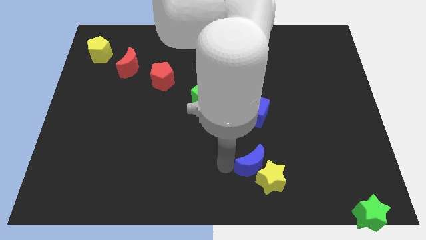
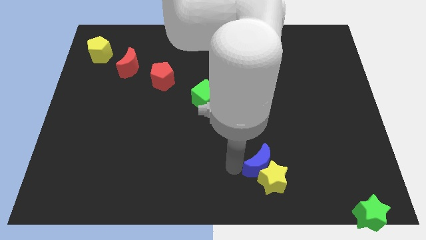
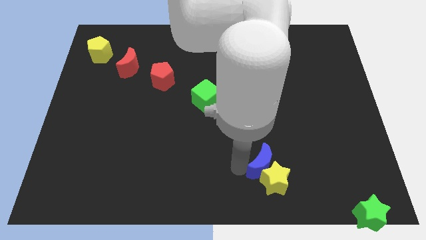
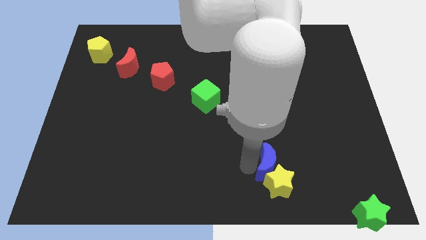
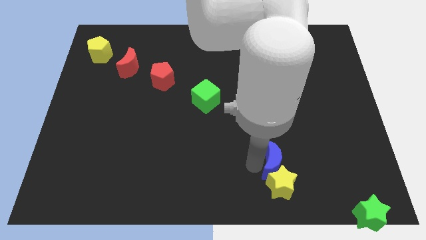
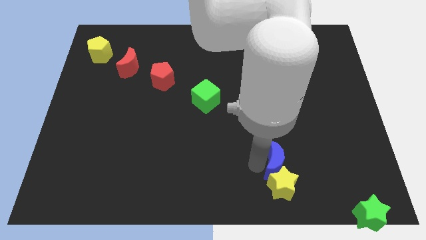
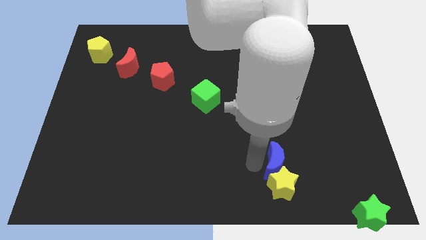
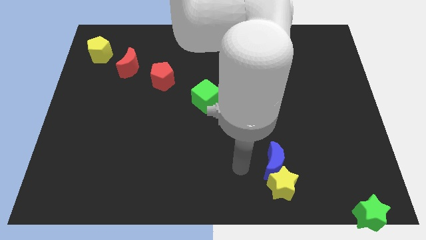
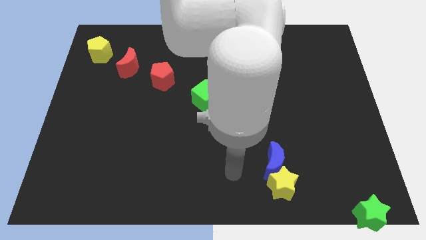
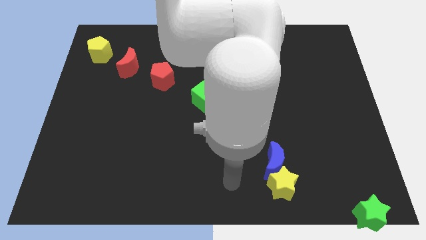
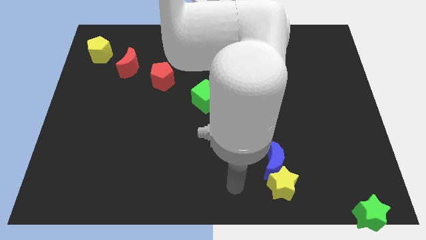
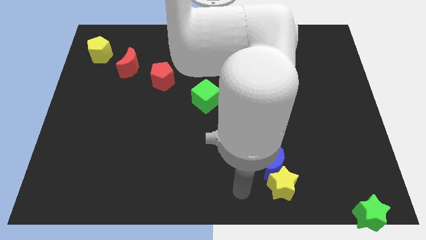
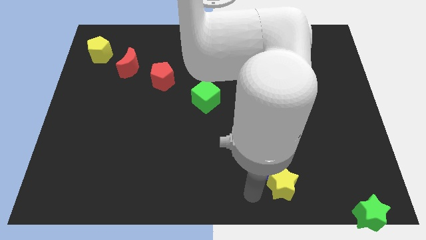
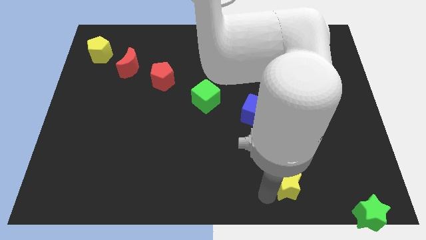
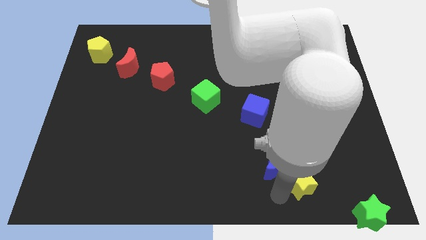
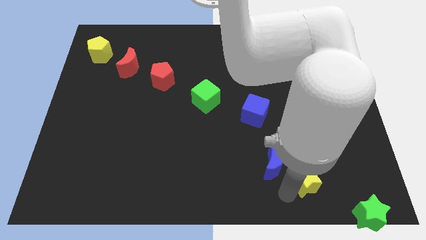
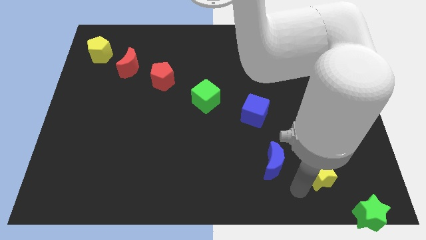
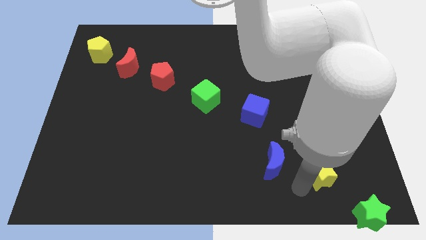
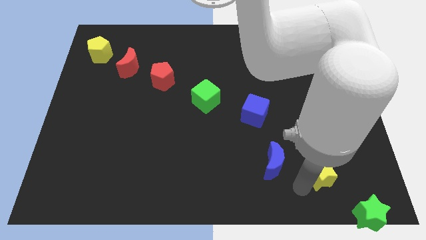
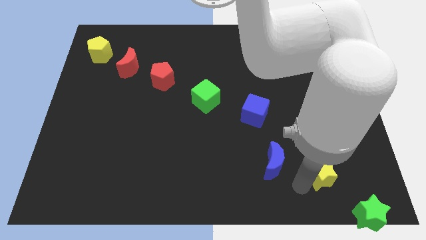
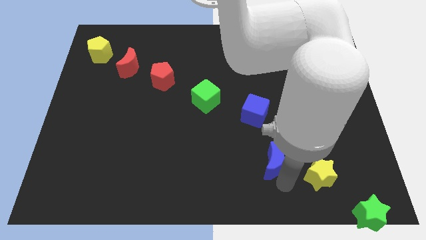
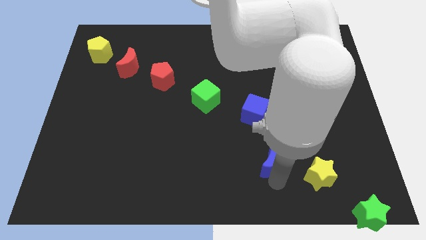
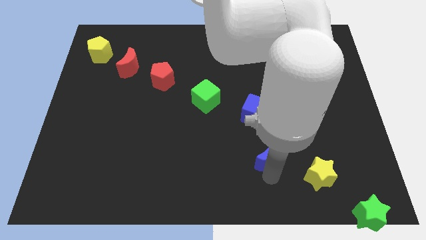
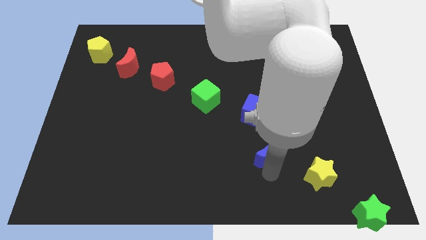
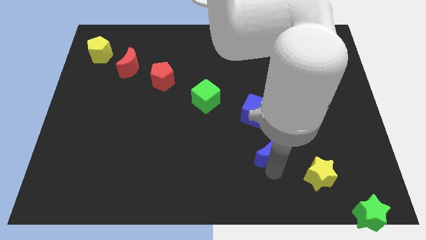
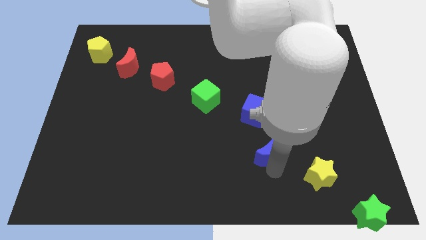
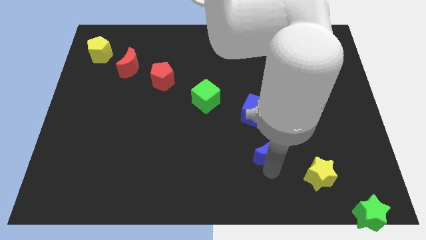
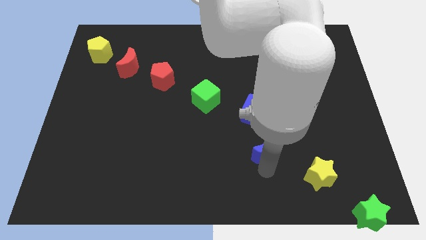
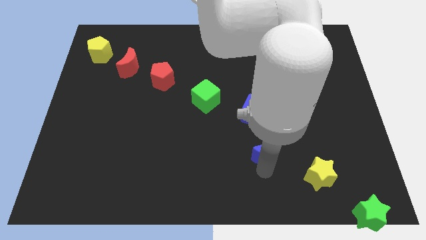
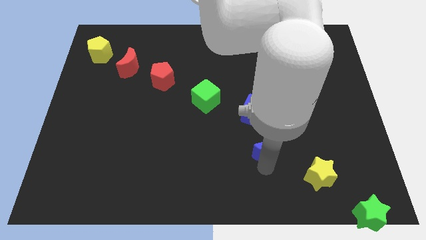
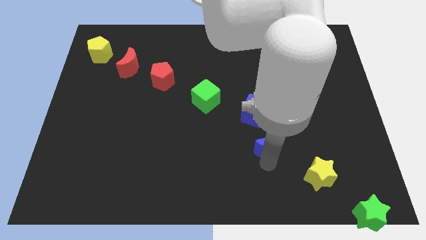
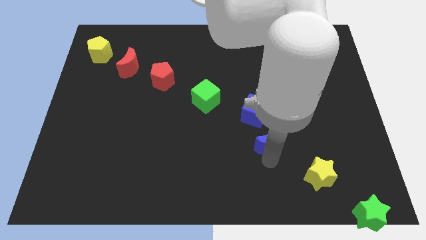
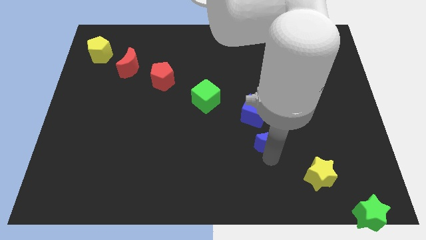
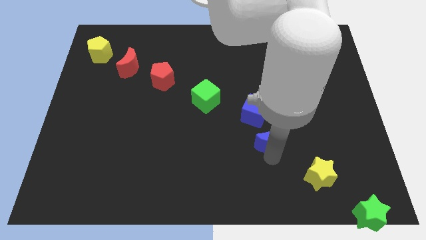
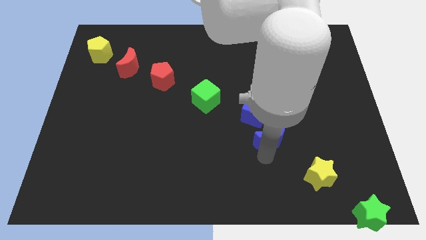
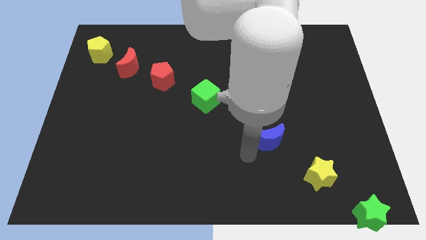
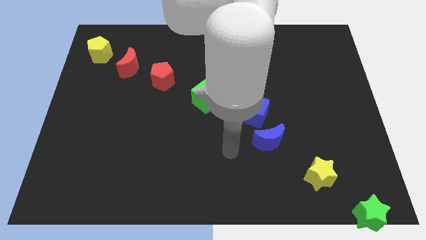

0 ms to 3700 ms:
separate blue moon and the yellow star

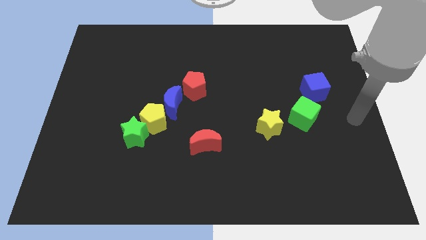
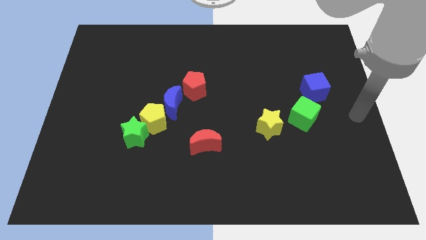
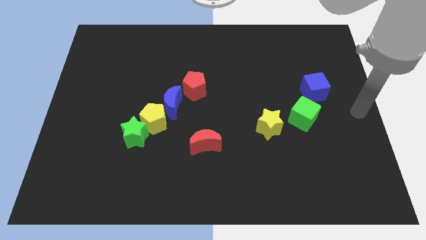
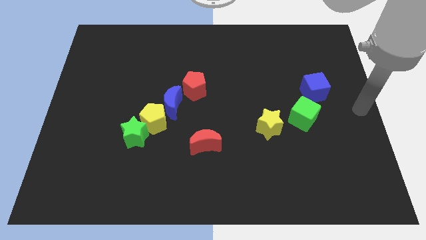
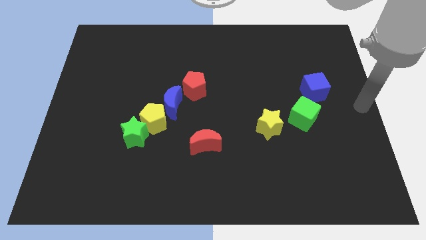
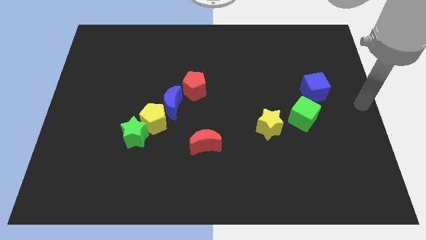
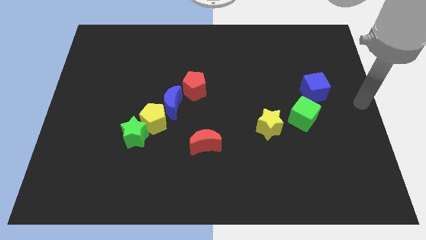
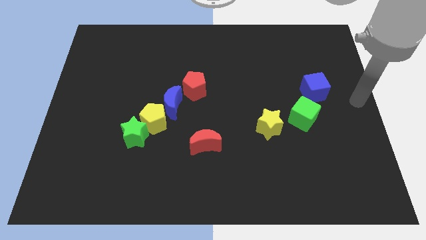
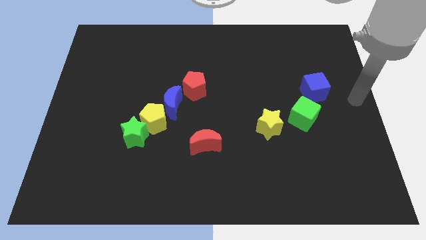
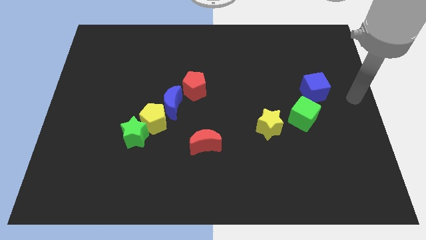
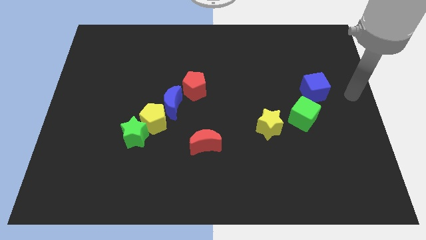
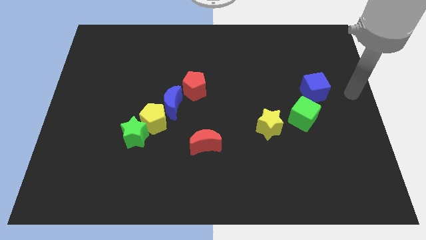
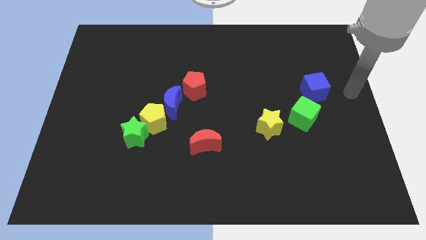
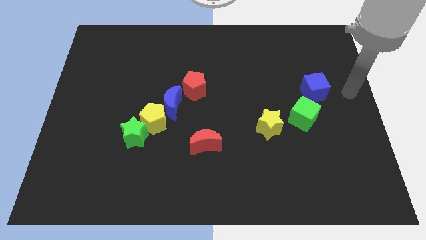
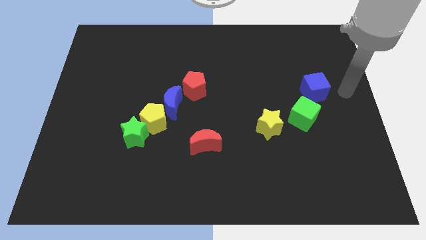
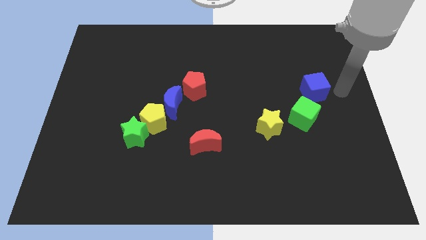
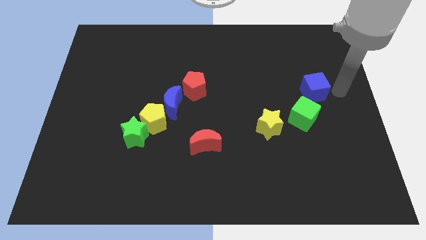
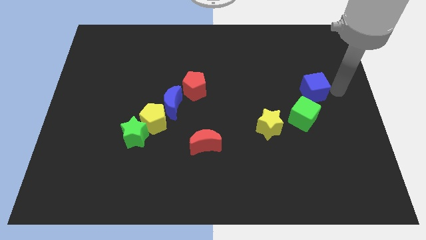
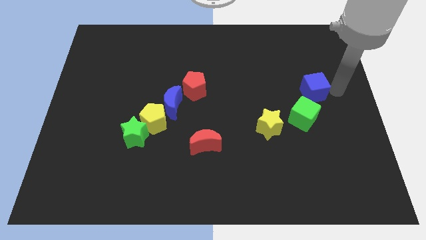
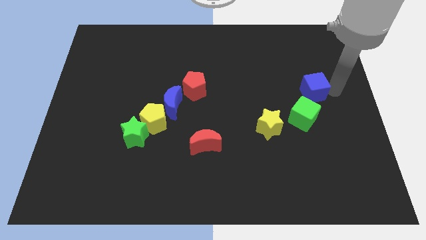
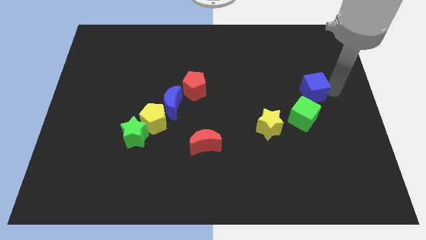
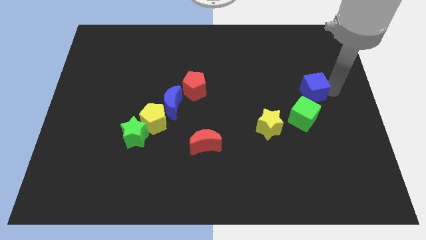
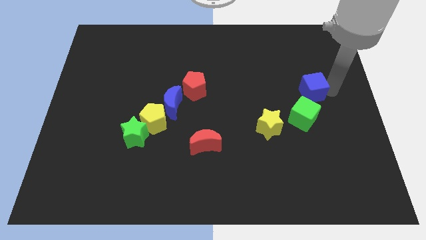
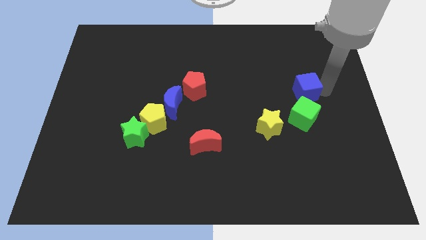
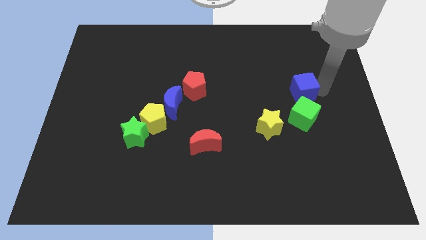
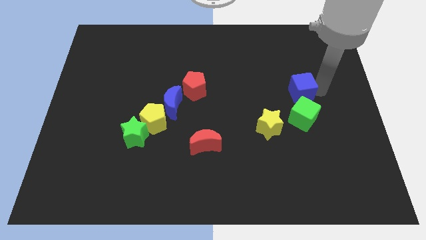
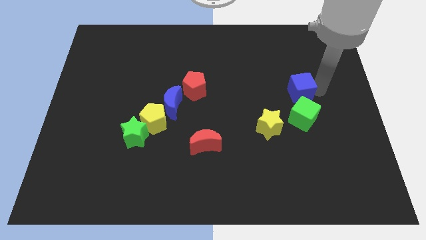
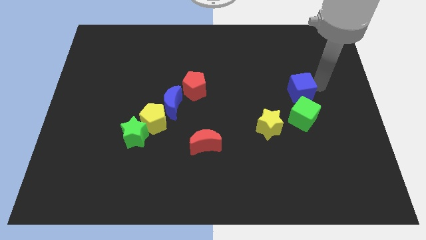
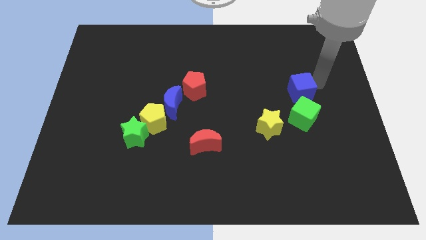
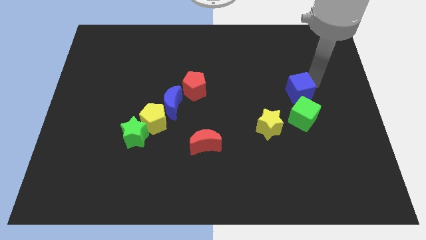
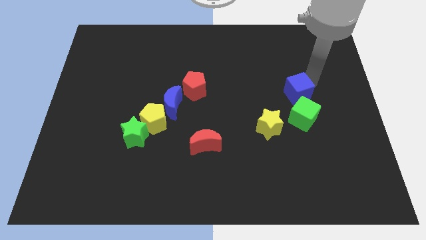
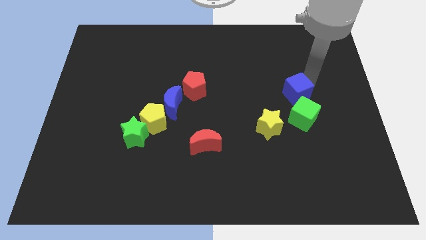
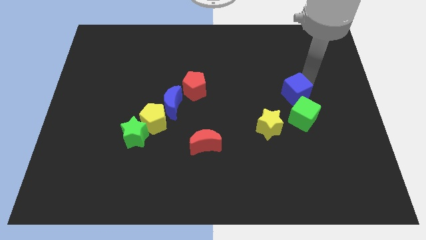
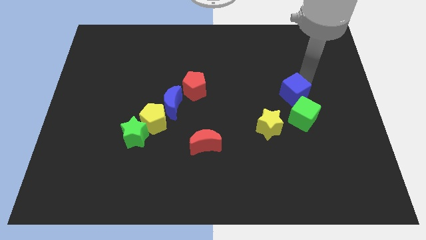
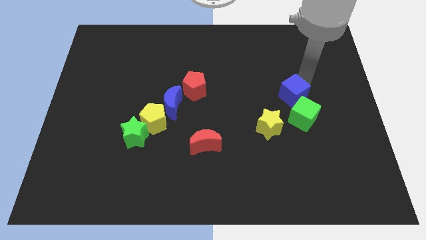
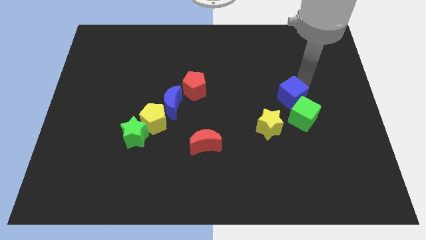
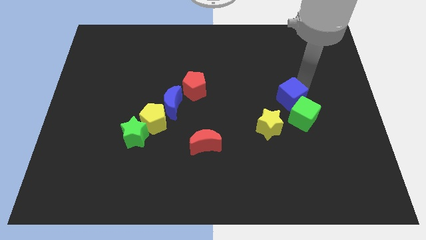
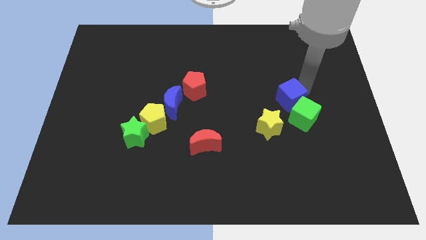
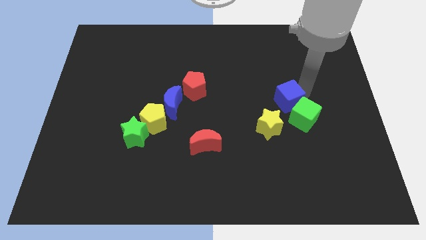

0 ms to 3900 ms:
make the blue cube and green cube to touch each other

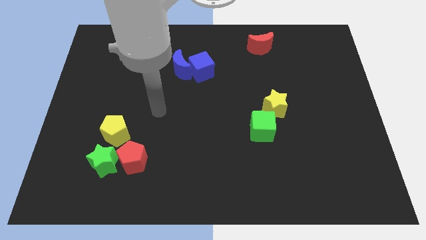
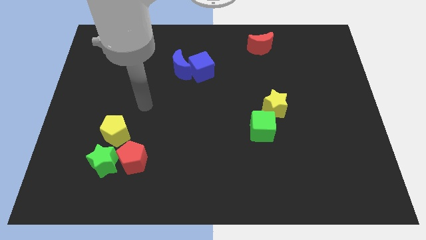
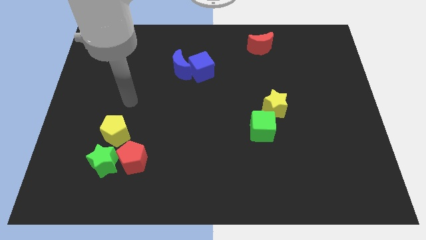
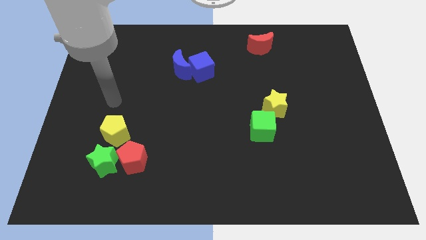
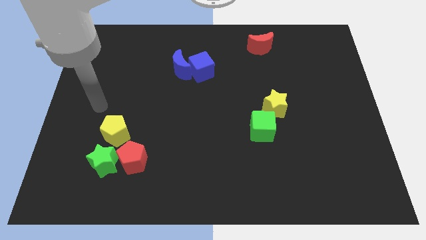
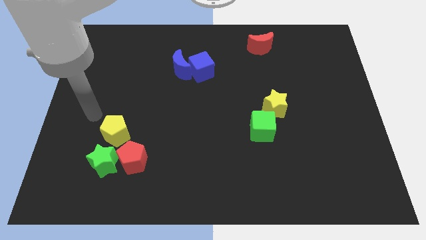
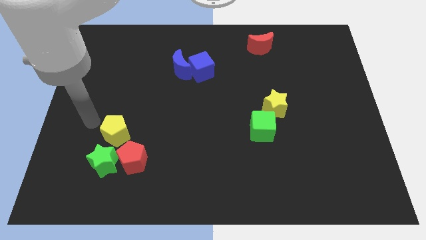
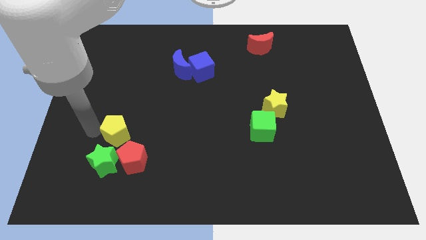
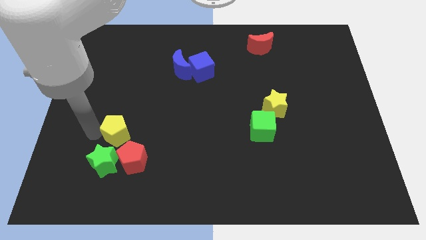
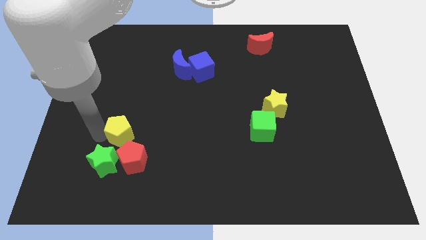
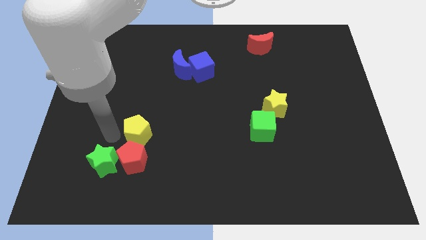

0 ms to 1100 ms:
put the yellow pentagon at the top of the red pentagon

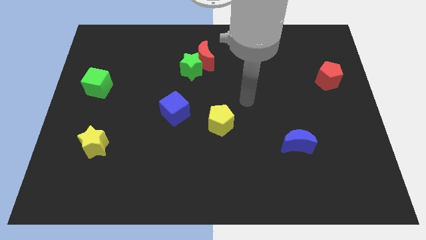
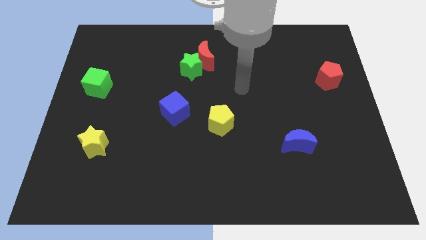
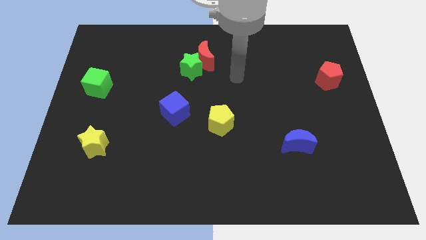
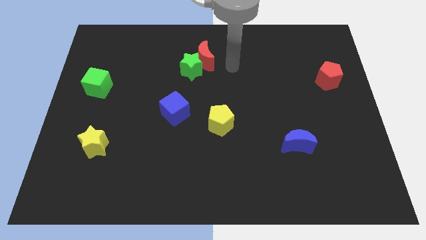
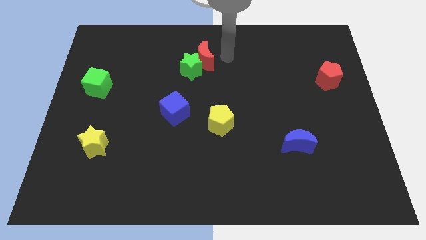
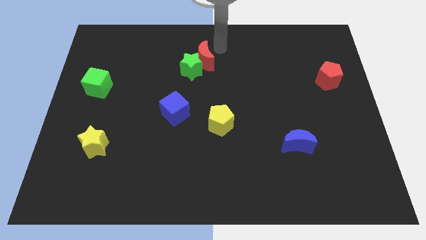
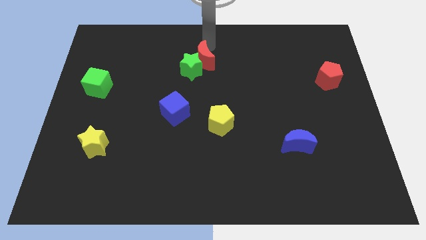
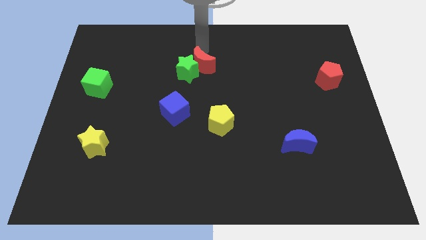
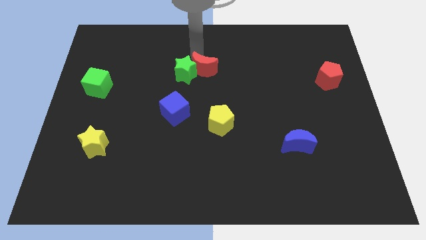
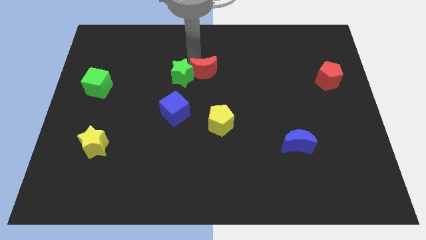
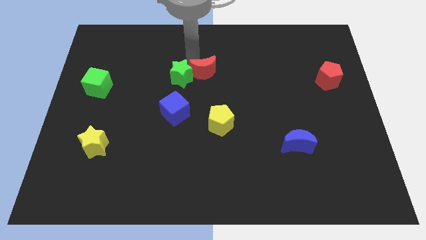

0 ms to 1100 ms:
push the red moon into a green star
